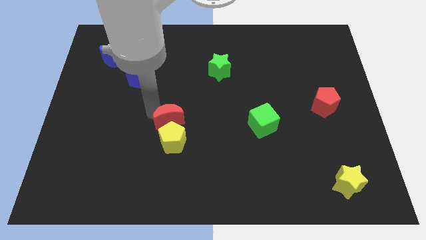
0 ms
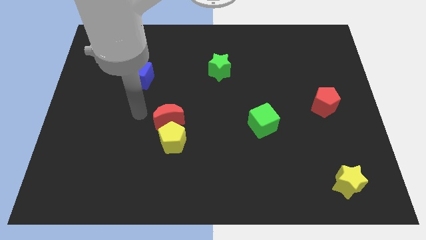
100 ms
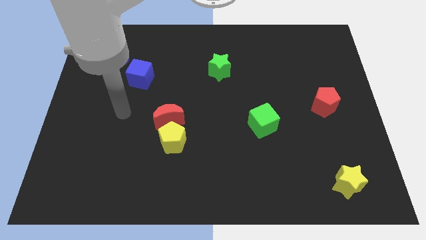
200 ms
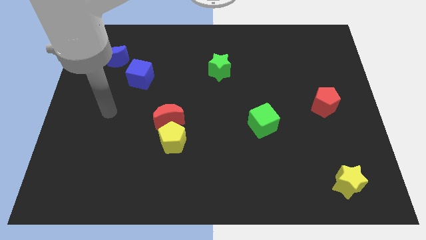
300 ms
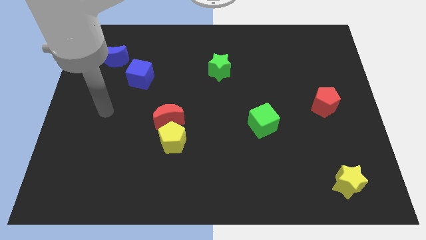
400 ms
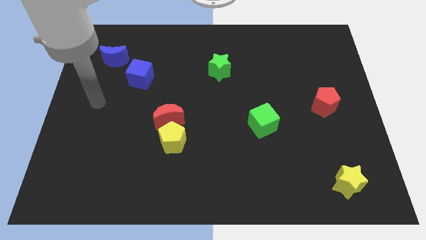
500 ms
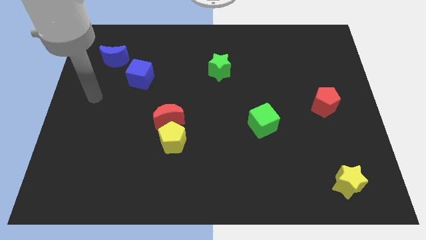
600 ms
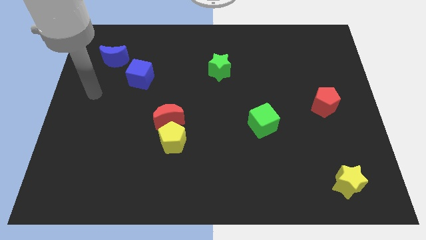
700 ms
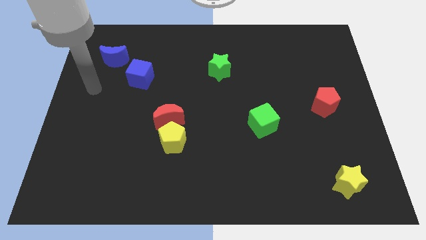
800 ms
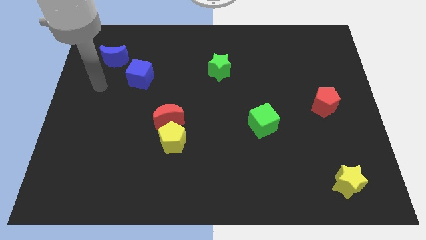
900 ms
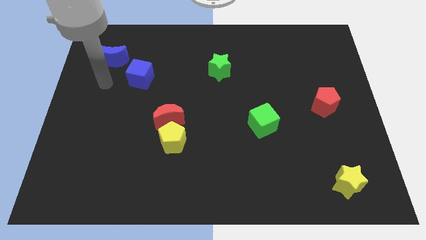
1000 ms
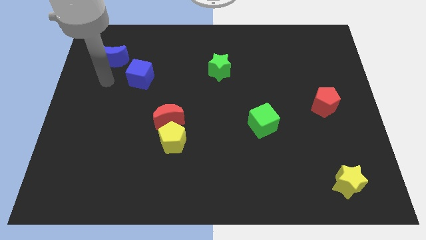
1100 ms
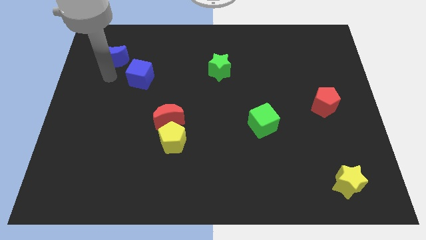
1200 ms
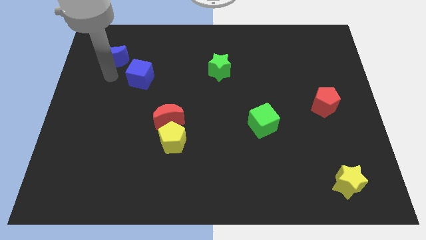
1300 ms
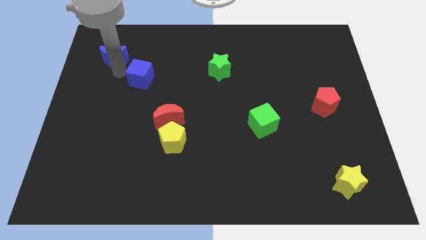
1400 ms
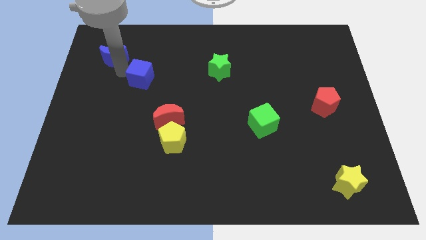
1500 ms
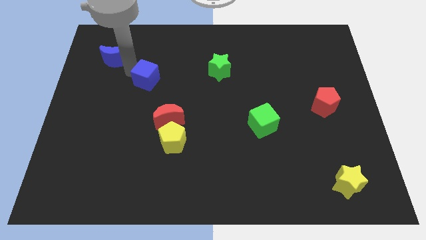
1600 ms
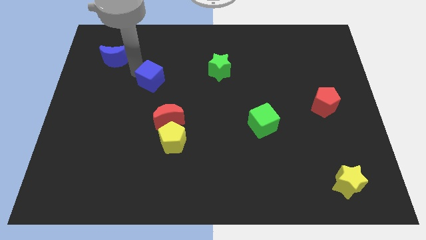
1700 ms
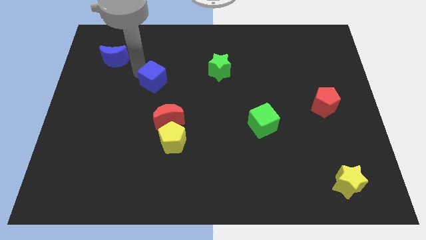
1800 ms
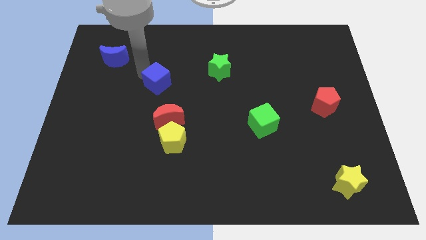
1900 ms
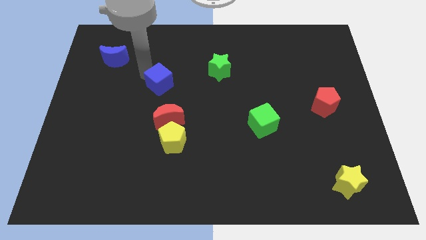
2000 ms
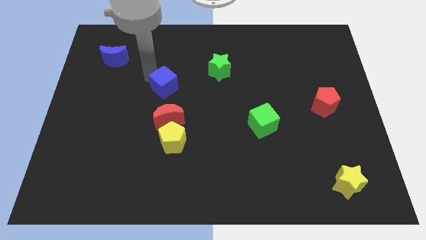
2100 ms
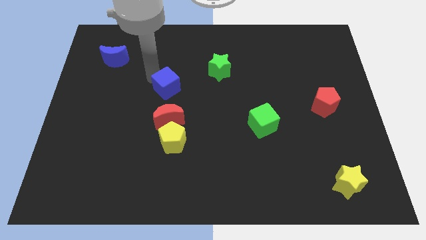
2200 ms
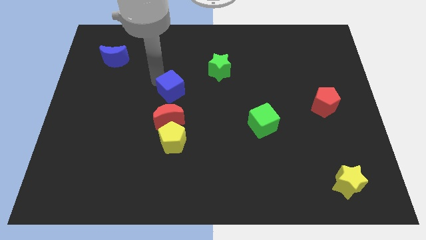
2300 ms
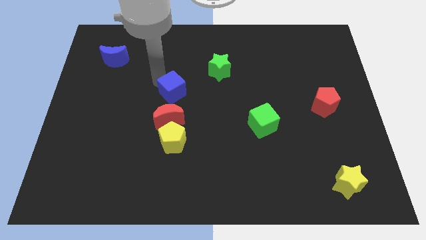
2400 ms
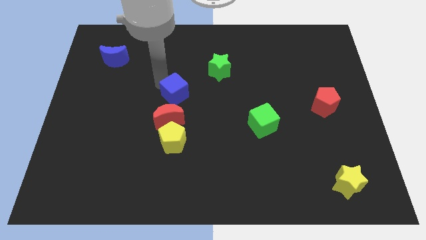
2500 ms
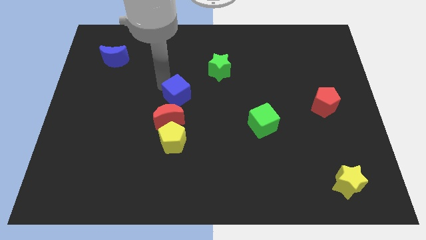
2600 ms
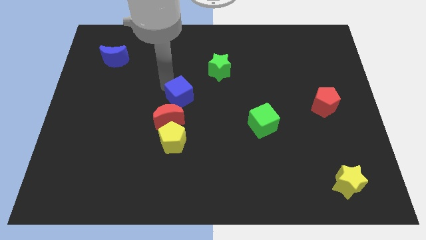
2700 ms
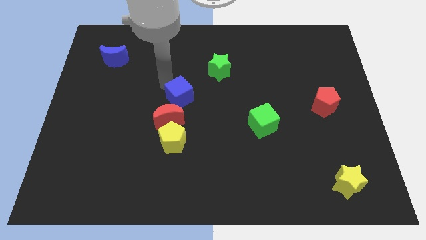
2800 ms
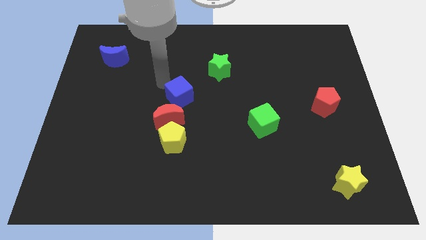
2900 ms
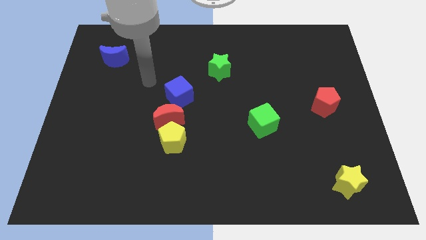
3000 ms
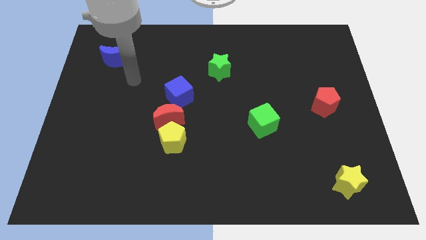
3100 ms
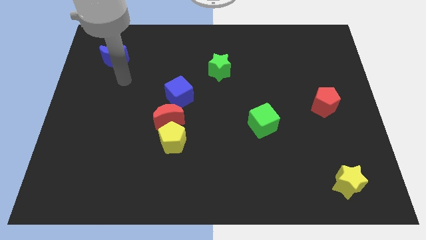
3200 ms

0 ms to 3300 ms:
move the blue cube at the top side of the red crescent

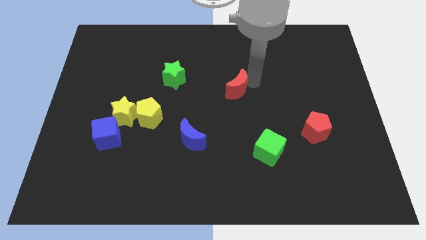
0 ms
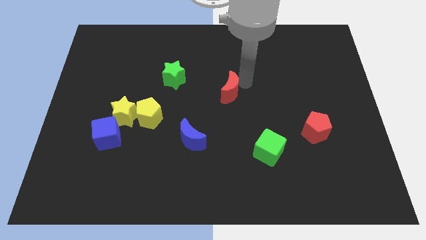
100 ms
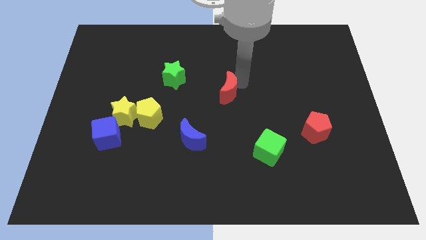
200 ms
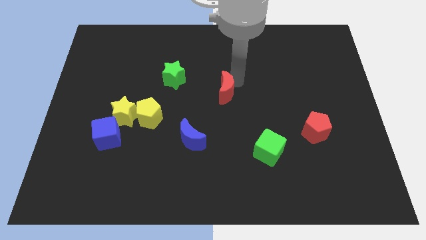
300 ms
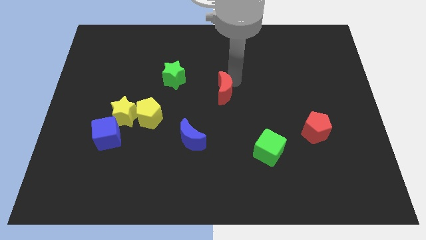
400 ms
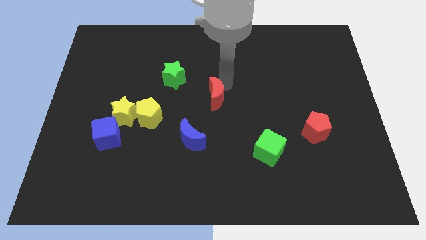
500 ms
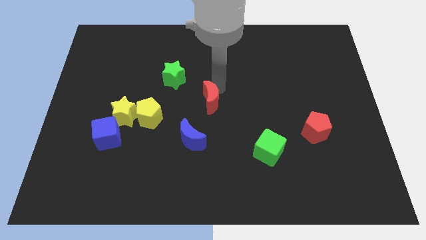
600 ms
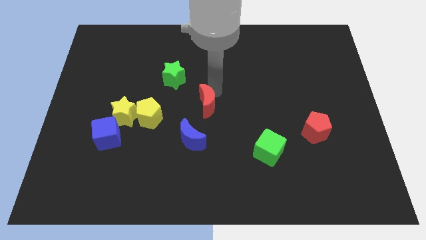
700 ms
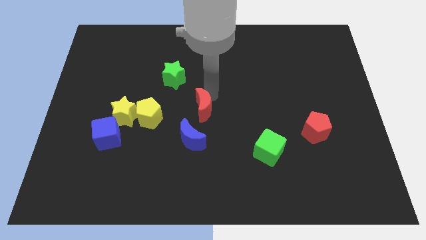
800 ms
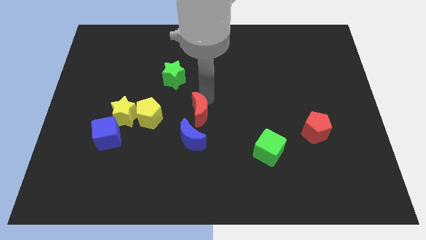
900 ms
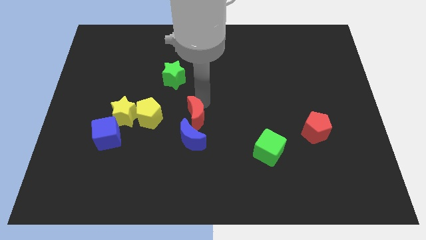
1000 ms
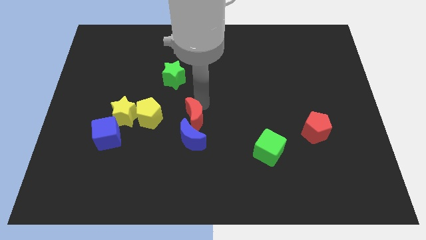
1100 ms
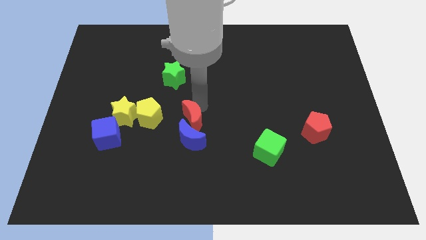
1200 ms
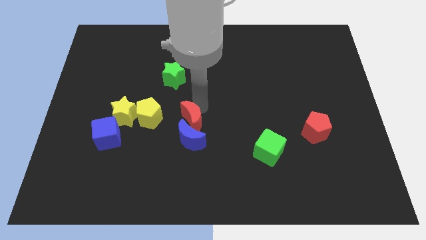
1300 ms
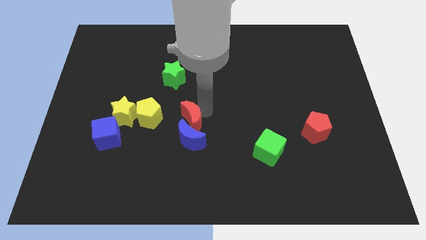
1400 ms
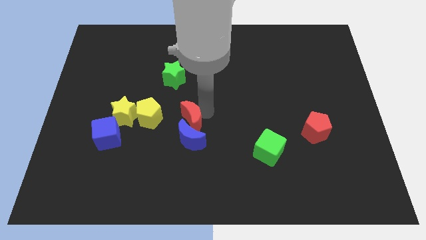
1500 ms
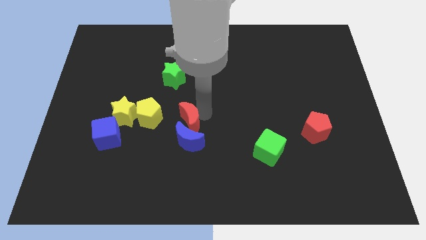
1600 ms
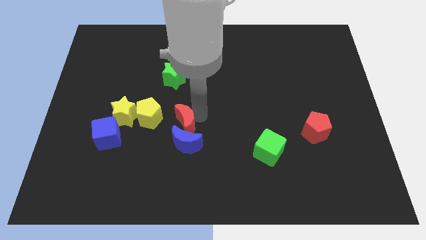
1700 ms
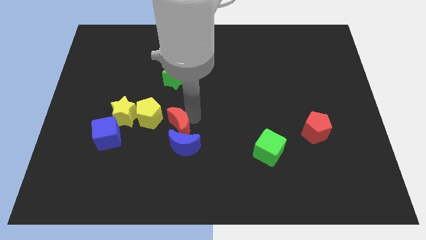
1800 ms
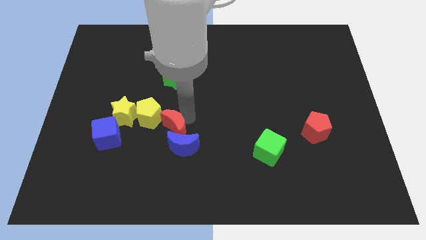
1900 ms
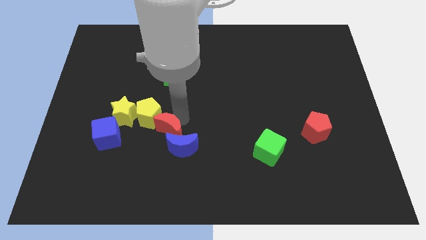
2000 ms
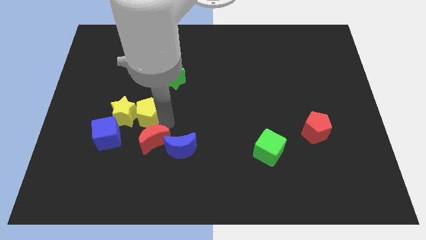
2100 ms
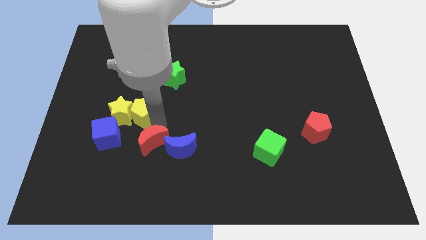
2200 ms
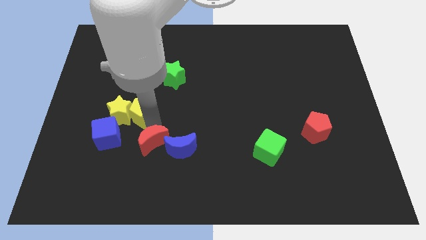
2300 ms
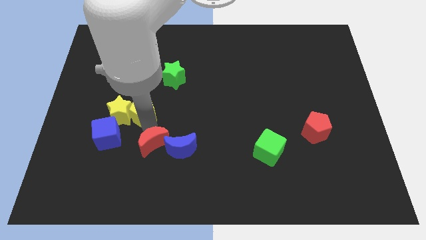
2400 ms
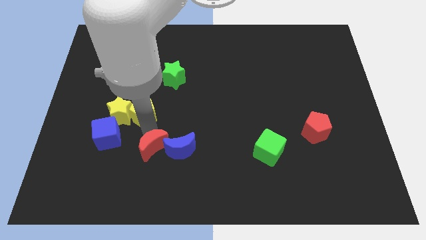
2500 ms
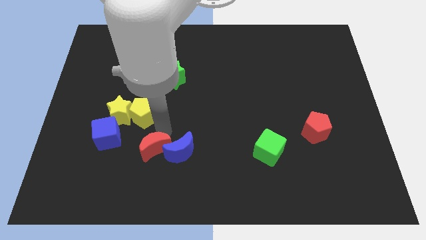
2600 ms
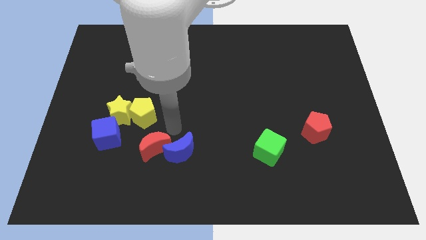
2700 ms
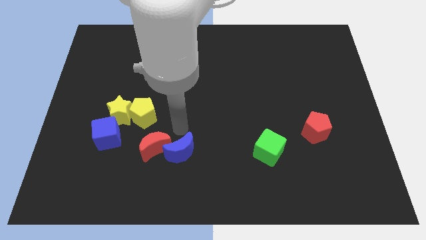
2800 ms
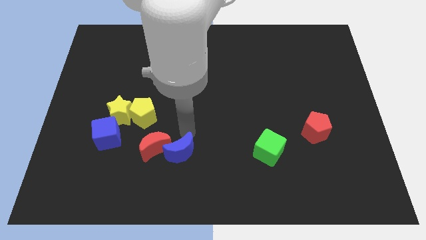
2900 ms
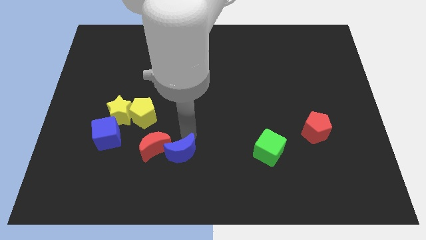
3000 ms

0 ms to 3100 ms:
push the red moon into the blue moon

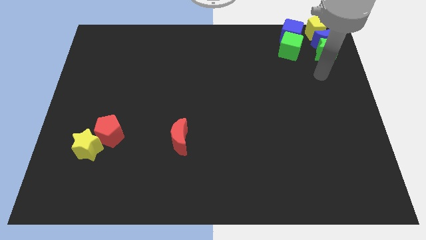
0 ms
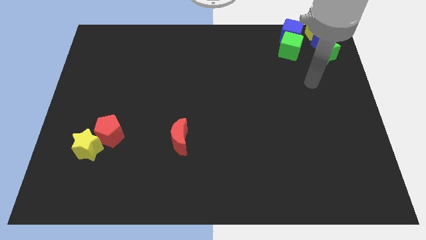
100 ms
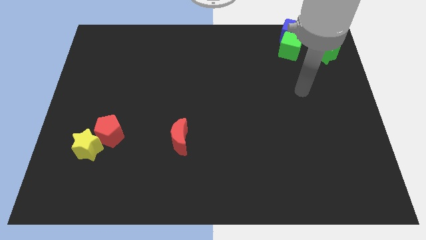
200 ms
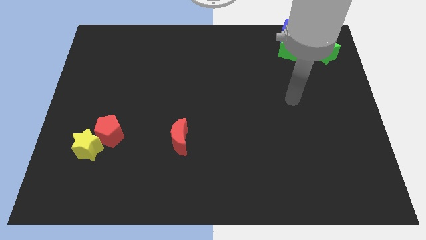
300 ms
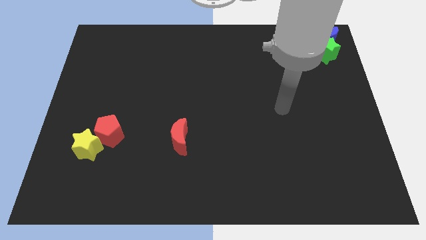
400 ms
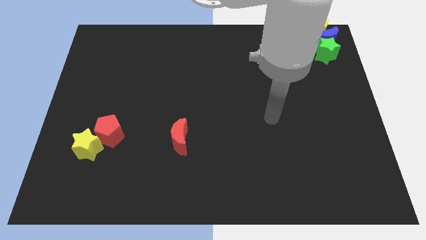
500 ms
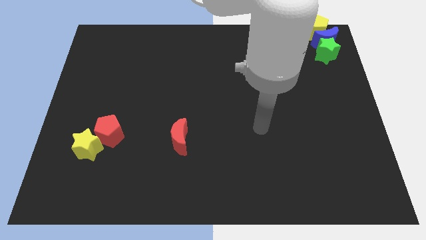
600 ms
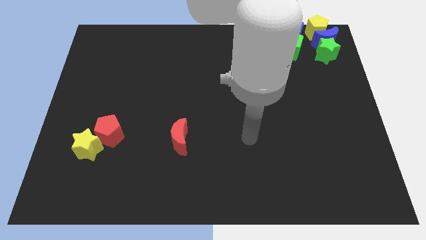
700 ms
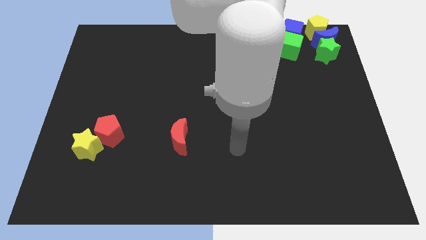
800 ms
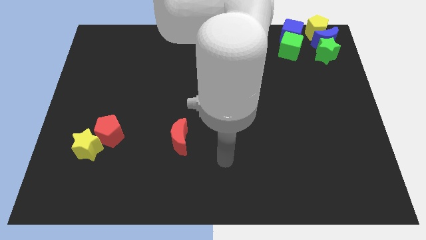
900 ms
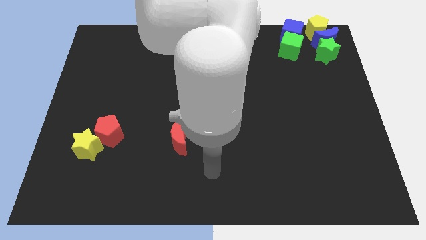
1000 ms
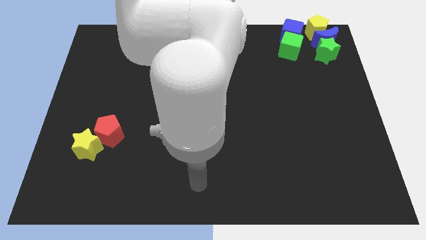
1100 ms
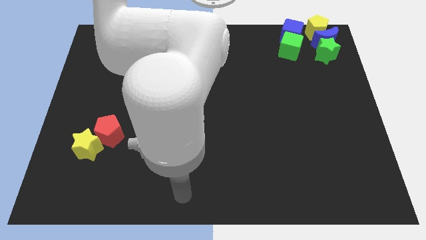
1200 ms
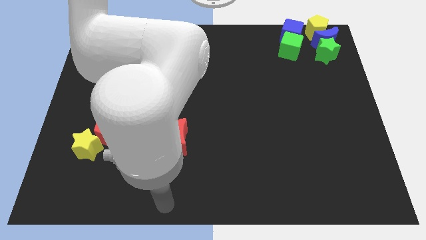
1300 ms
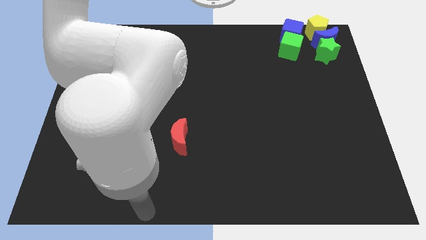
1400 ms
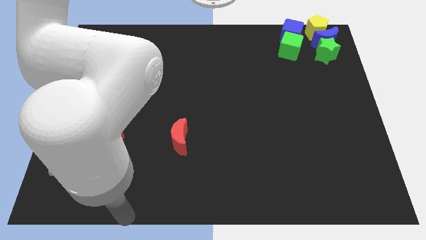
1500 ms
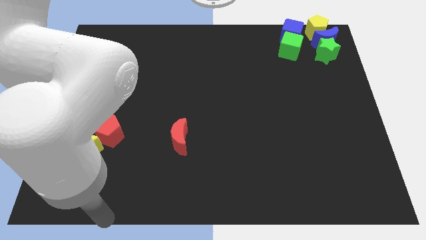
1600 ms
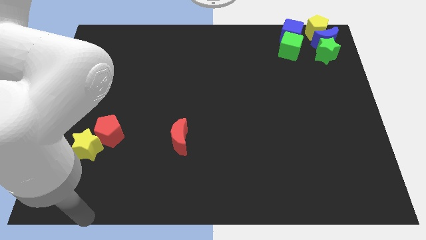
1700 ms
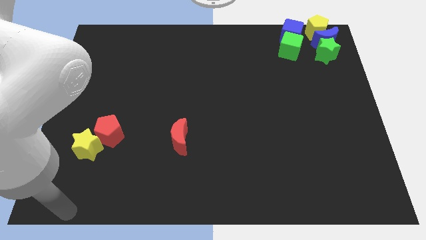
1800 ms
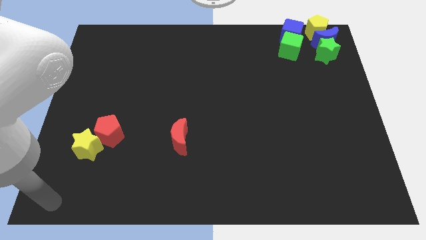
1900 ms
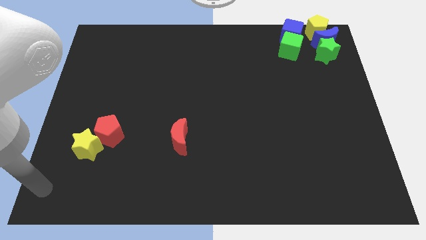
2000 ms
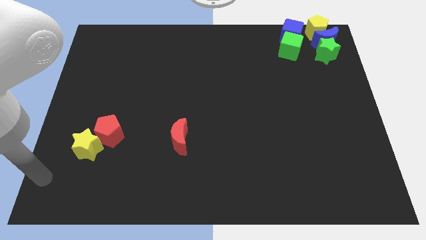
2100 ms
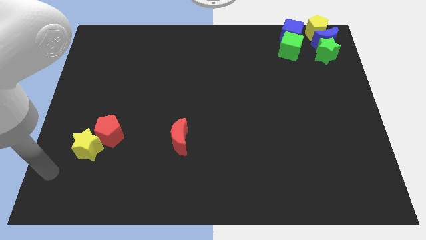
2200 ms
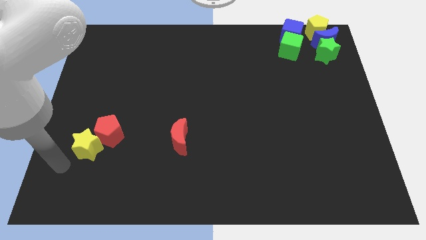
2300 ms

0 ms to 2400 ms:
move your arm diagonally left of the yellow star

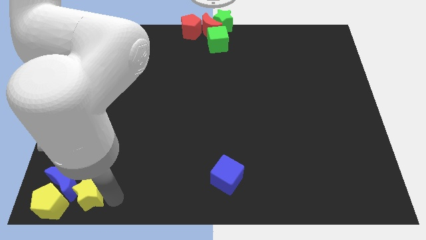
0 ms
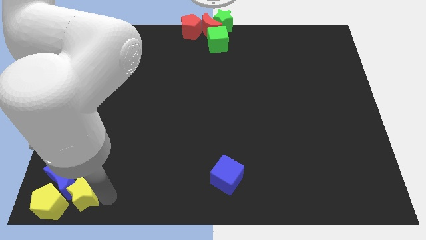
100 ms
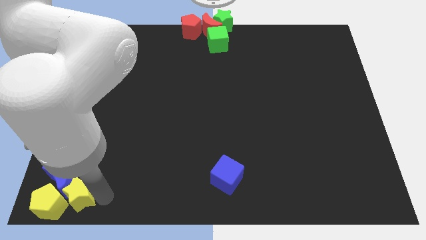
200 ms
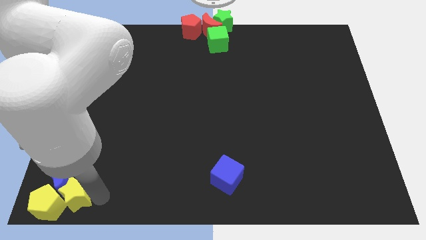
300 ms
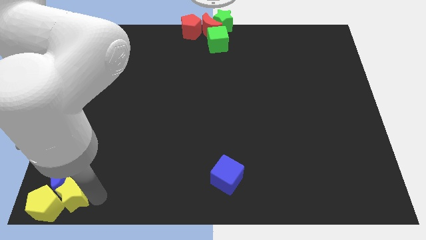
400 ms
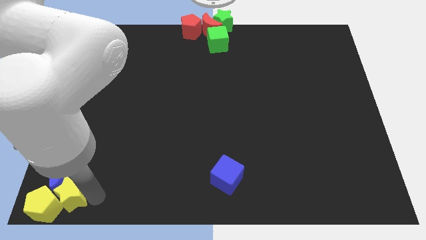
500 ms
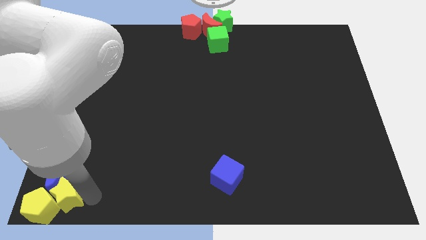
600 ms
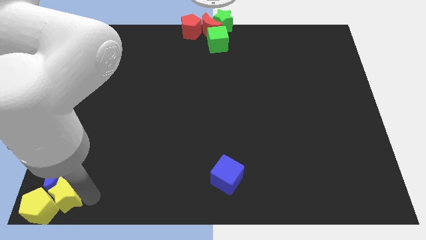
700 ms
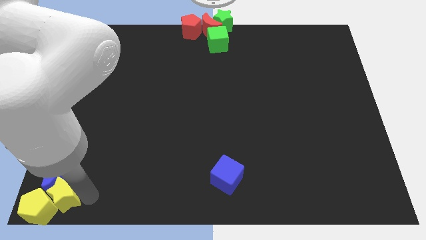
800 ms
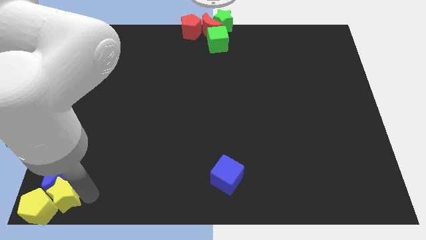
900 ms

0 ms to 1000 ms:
push the yellow star into the yellow pentagon
